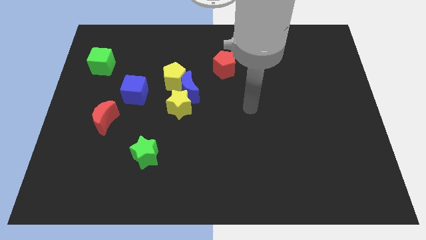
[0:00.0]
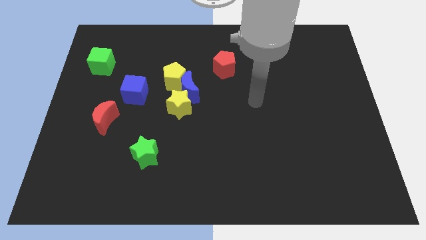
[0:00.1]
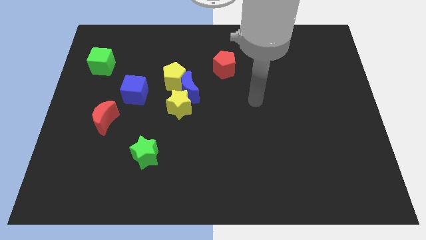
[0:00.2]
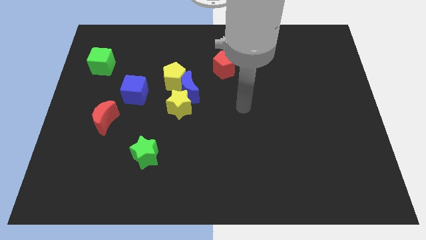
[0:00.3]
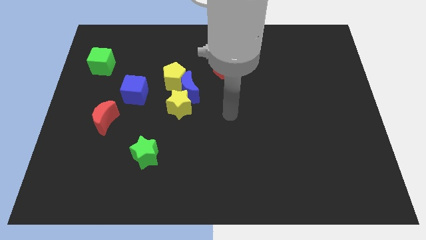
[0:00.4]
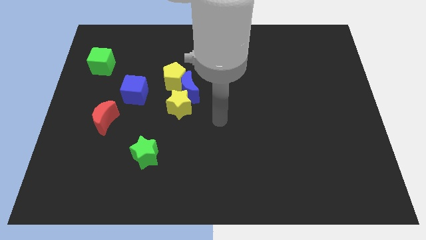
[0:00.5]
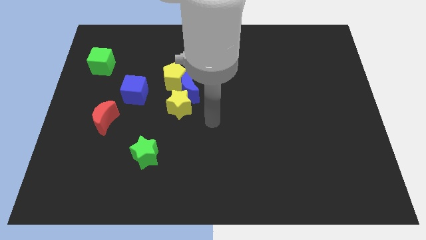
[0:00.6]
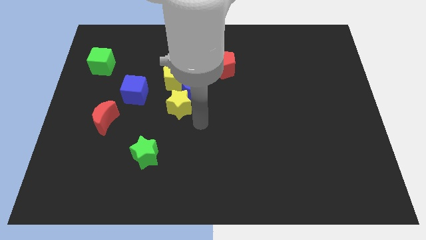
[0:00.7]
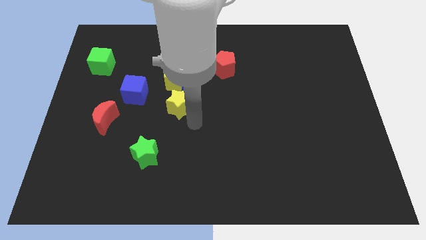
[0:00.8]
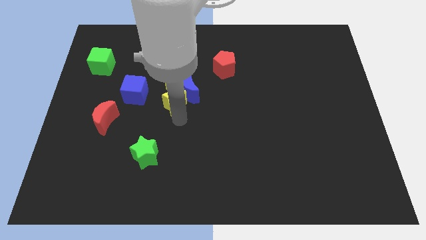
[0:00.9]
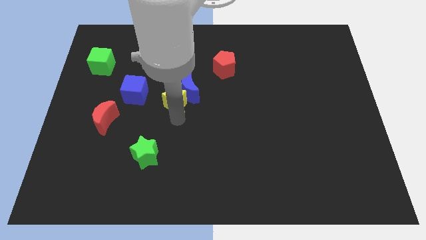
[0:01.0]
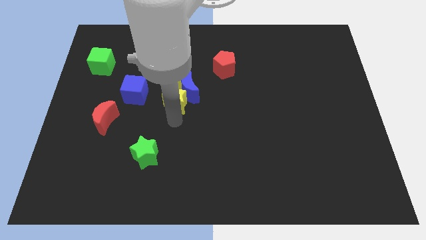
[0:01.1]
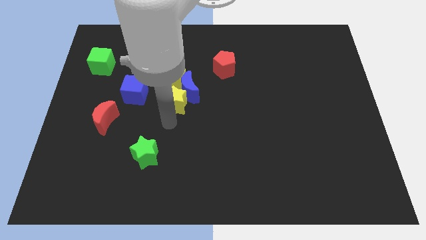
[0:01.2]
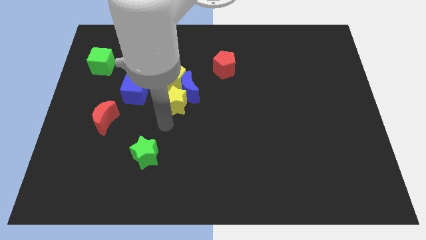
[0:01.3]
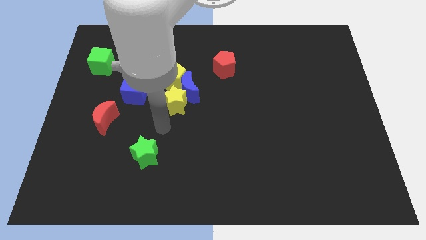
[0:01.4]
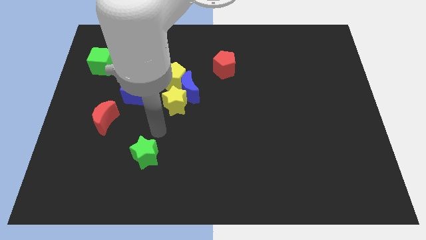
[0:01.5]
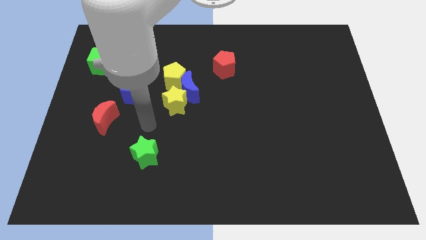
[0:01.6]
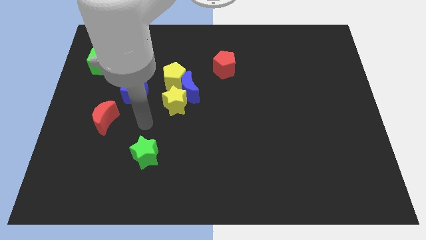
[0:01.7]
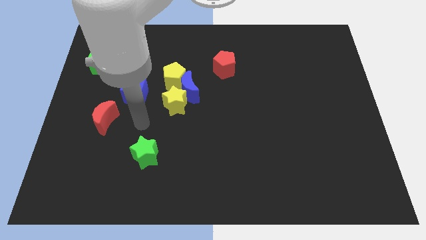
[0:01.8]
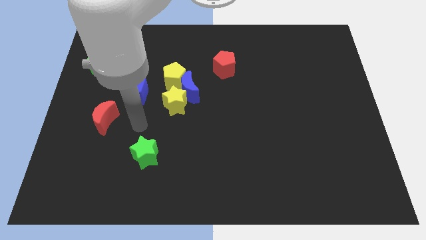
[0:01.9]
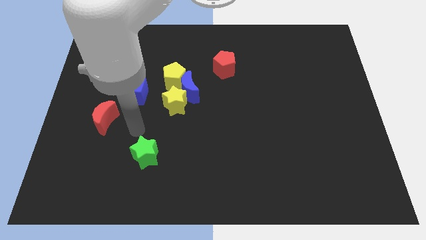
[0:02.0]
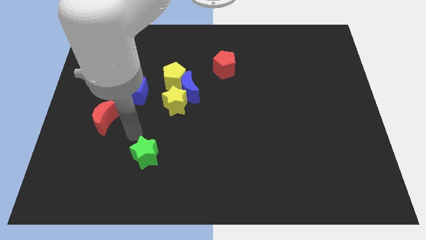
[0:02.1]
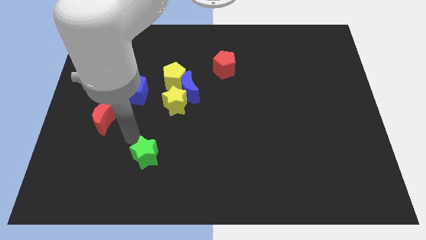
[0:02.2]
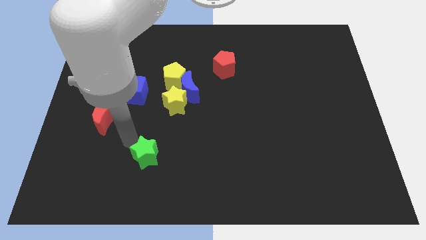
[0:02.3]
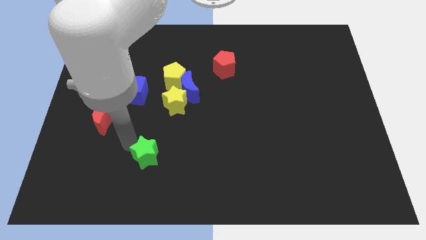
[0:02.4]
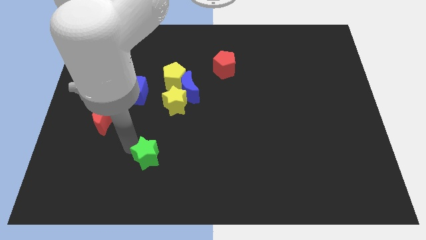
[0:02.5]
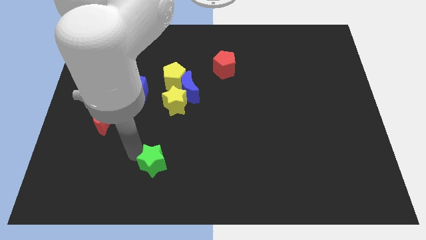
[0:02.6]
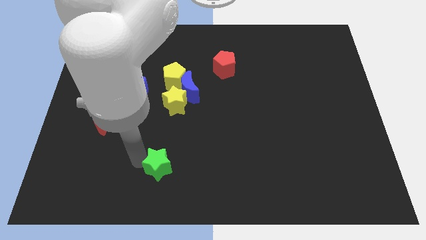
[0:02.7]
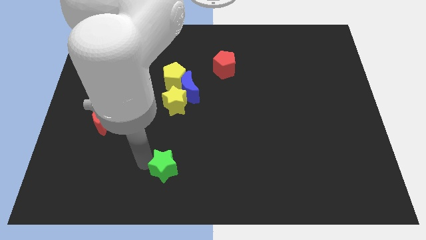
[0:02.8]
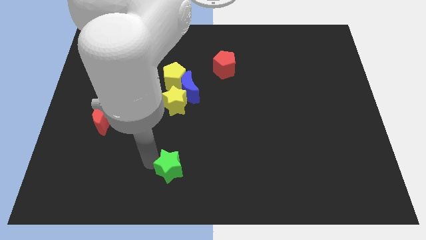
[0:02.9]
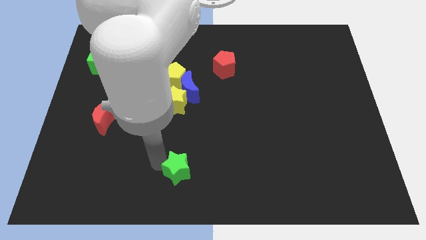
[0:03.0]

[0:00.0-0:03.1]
drag green star towards right side of the board

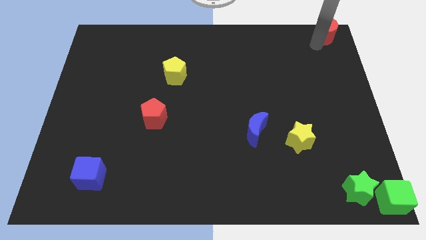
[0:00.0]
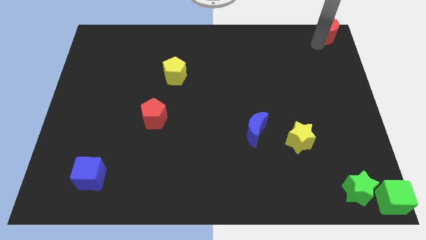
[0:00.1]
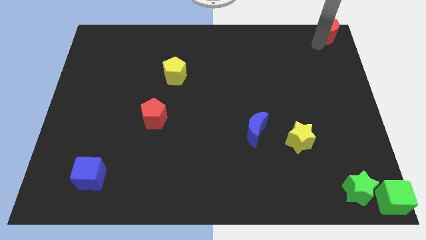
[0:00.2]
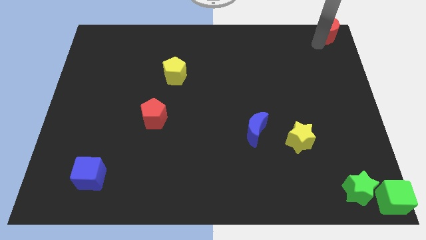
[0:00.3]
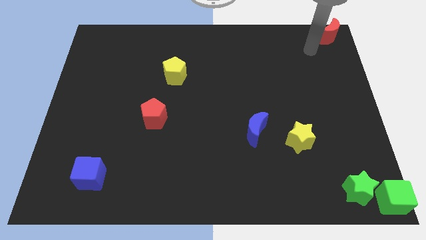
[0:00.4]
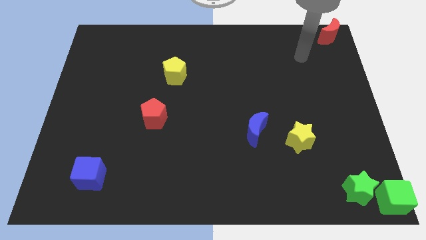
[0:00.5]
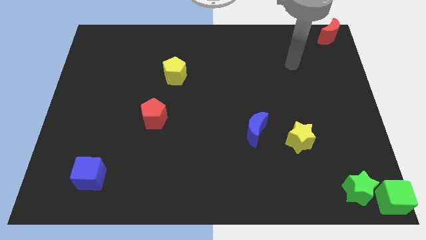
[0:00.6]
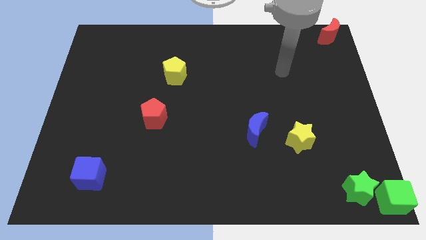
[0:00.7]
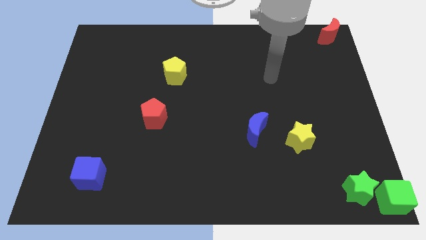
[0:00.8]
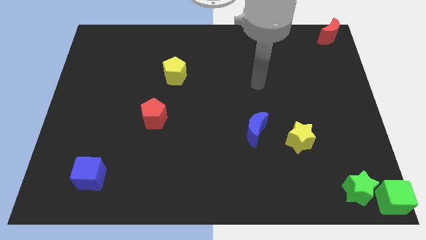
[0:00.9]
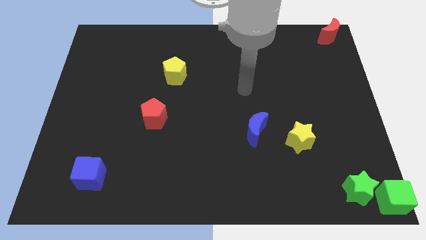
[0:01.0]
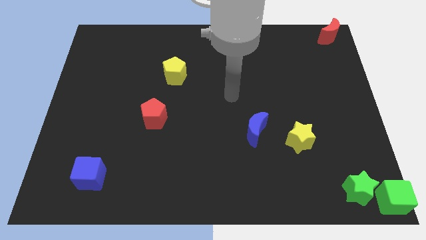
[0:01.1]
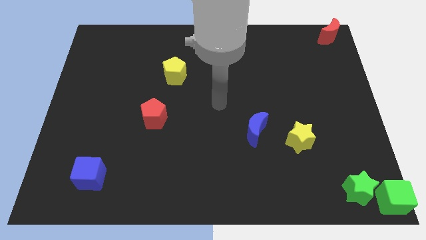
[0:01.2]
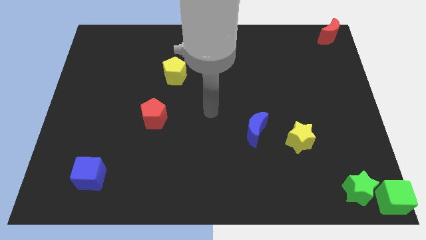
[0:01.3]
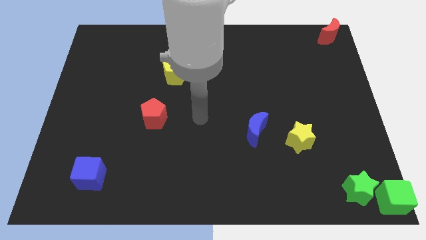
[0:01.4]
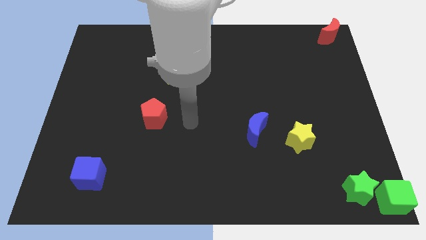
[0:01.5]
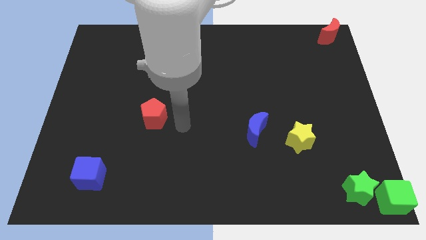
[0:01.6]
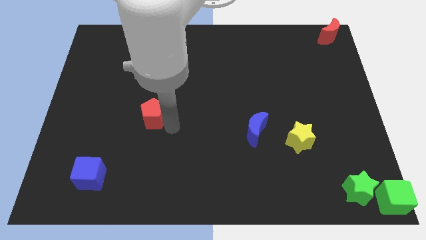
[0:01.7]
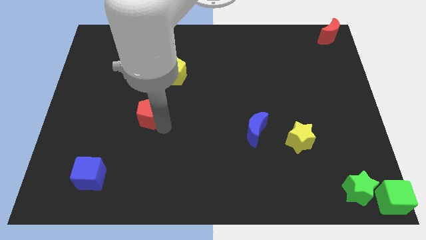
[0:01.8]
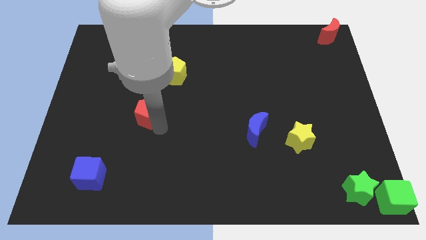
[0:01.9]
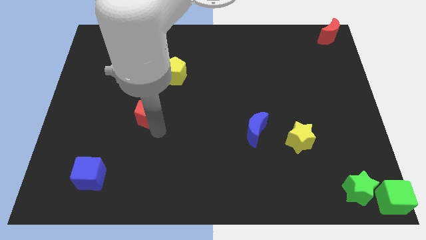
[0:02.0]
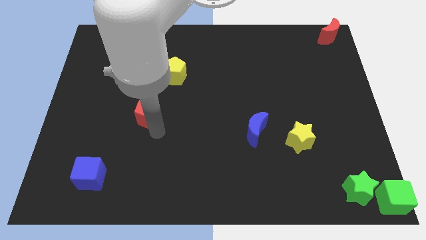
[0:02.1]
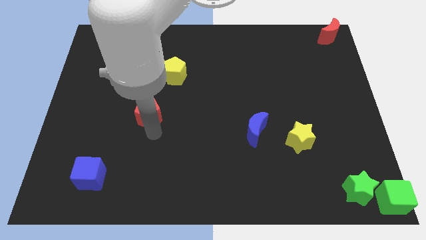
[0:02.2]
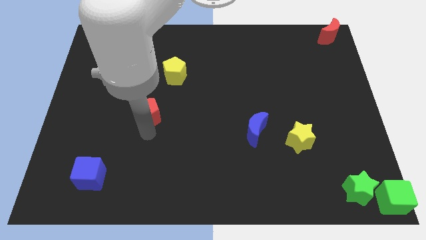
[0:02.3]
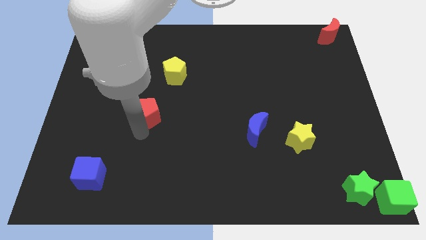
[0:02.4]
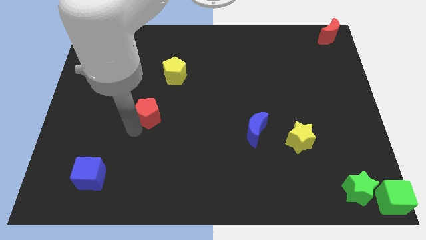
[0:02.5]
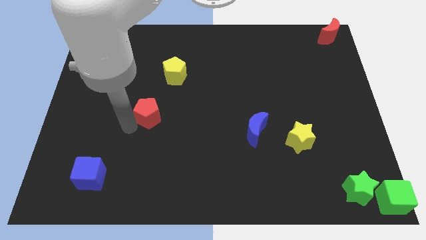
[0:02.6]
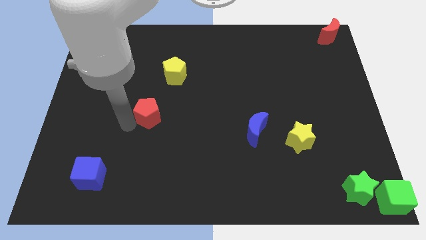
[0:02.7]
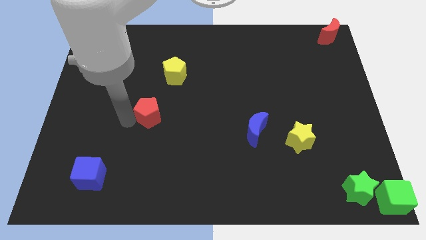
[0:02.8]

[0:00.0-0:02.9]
move arm near red pentagon

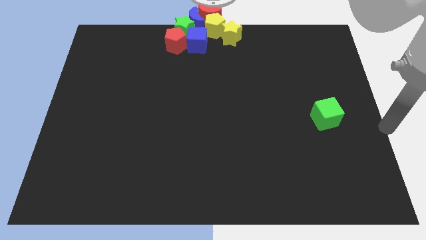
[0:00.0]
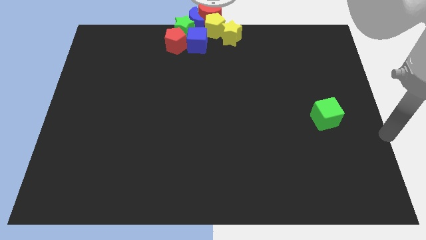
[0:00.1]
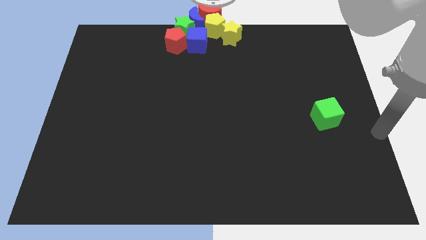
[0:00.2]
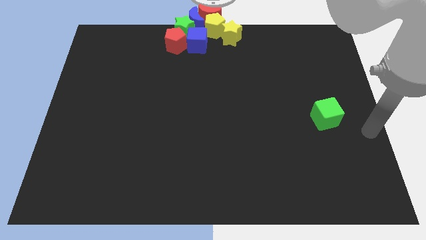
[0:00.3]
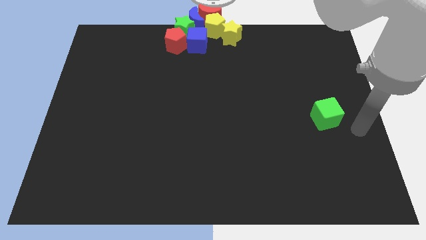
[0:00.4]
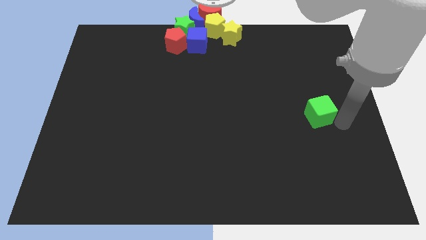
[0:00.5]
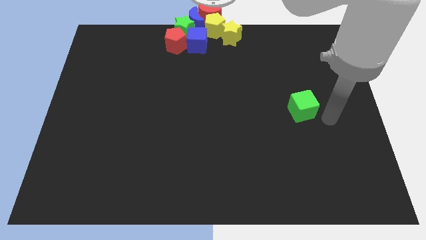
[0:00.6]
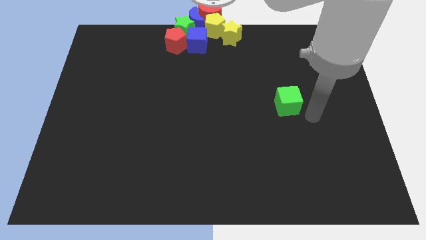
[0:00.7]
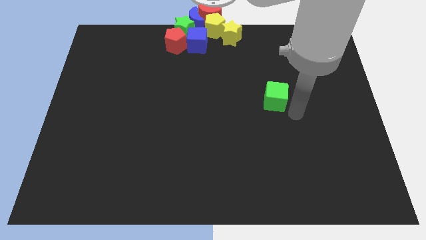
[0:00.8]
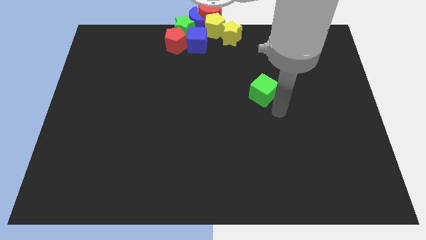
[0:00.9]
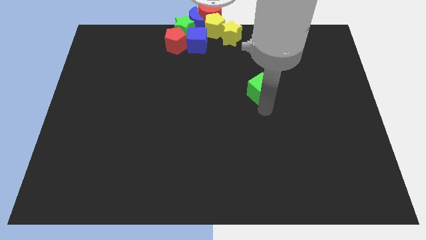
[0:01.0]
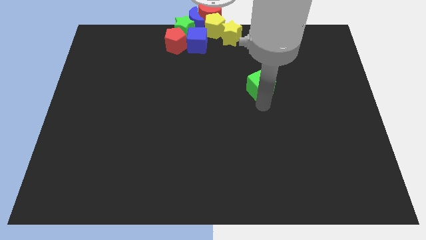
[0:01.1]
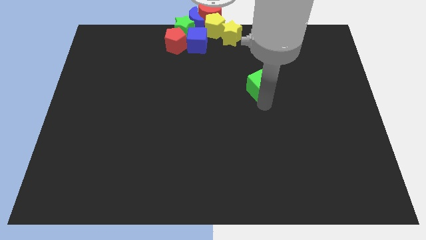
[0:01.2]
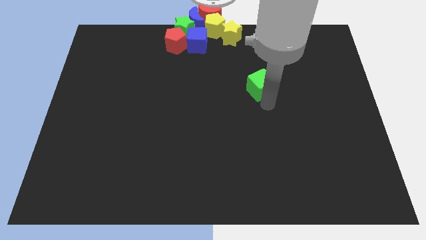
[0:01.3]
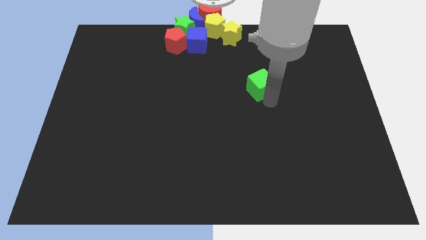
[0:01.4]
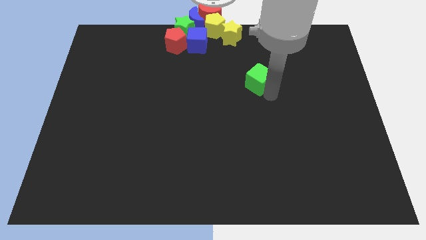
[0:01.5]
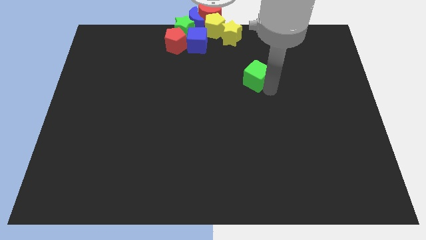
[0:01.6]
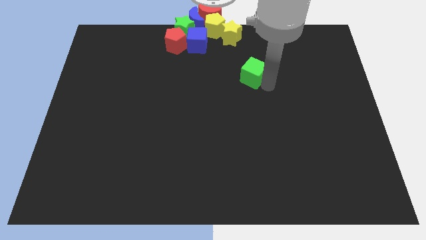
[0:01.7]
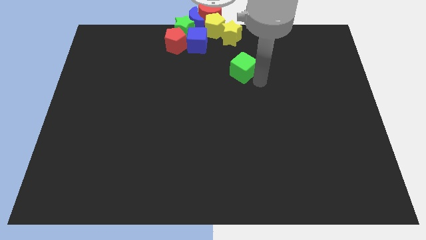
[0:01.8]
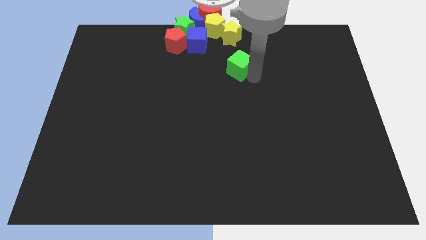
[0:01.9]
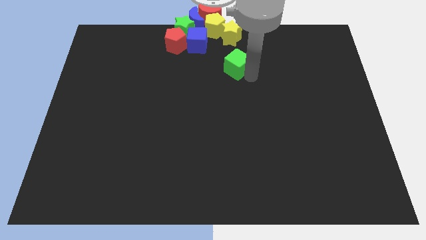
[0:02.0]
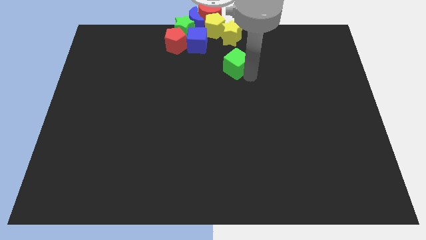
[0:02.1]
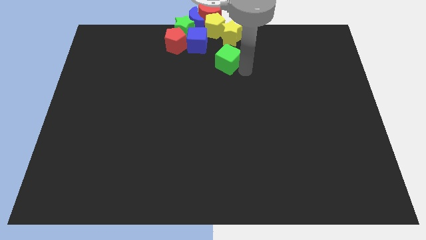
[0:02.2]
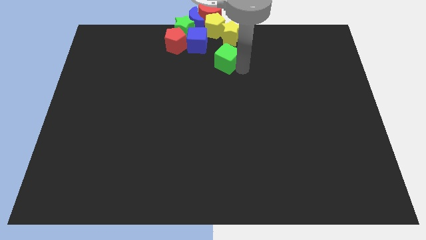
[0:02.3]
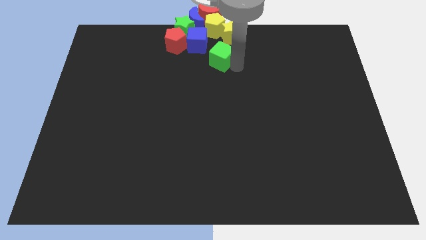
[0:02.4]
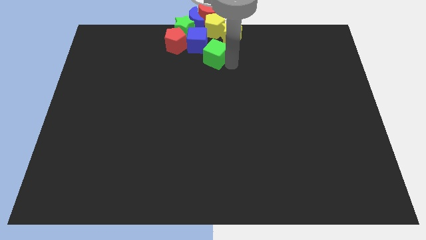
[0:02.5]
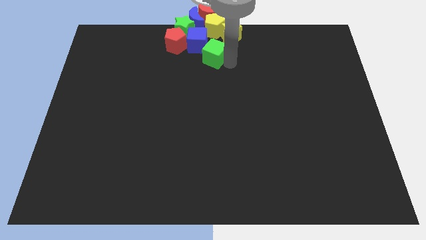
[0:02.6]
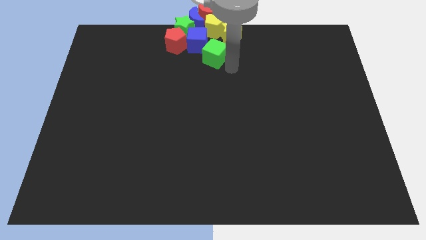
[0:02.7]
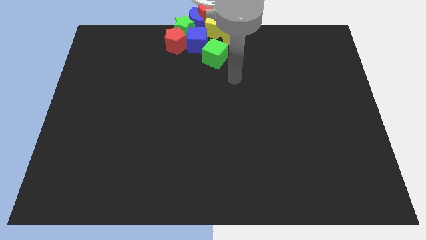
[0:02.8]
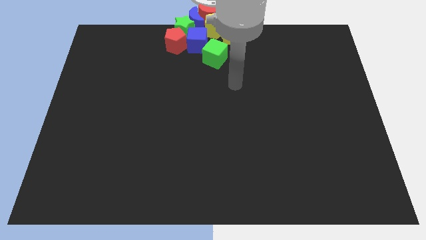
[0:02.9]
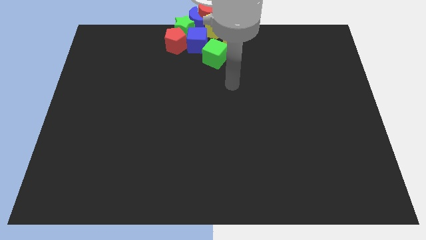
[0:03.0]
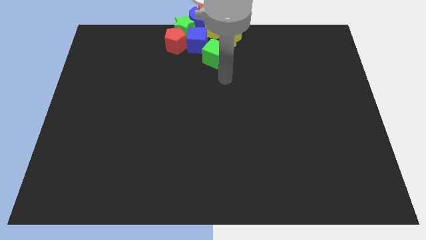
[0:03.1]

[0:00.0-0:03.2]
move green cube towards the group of blocks
